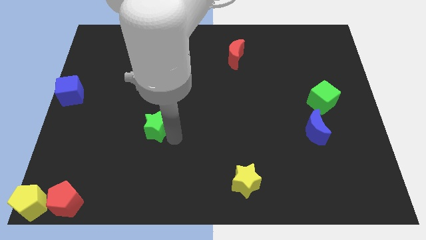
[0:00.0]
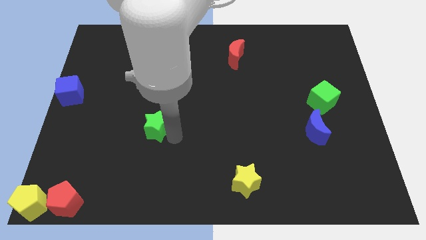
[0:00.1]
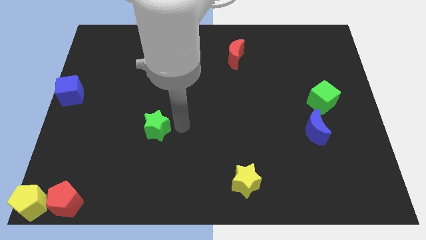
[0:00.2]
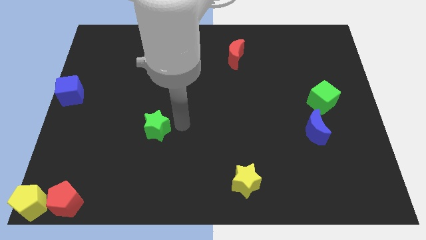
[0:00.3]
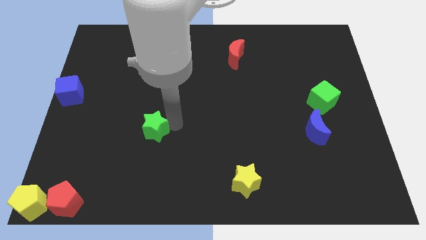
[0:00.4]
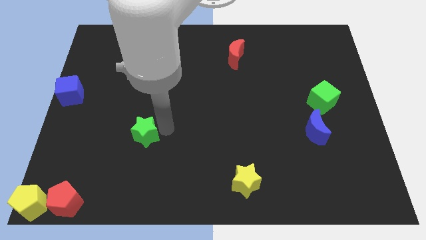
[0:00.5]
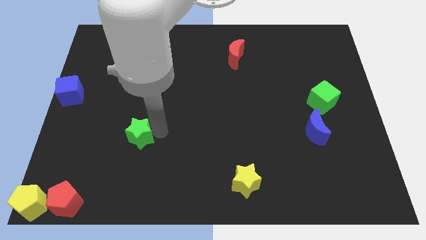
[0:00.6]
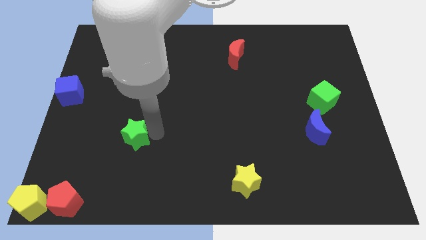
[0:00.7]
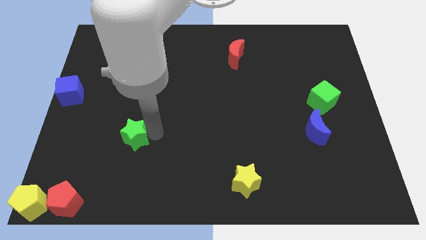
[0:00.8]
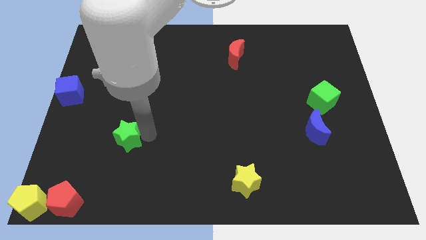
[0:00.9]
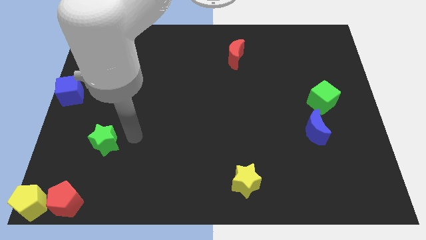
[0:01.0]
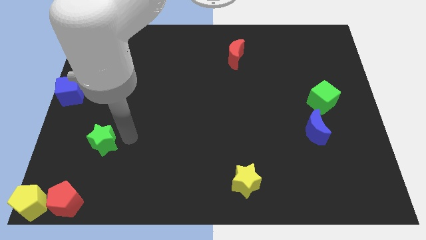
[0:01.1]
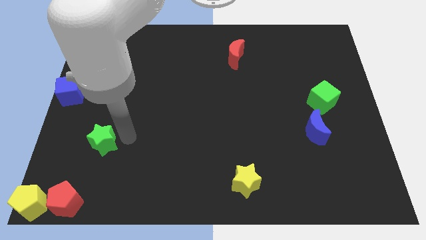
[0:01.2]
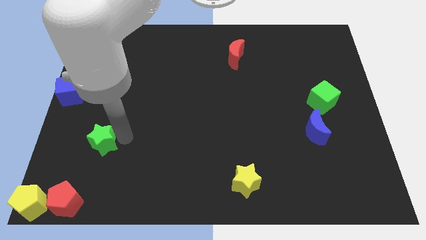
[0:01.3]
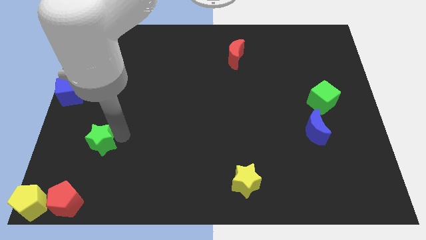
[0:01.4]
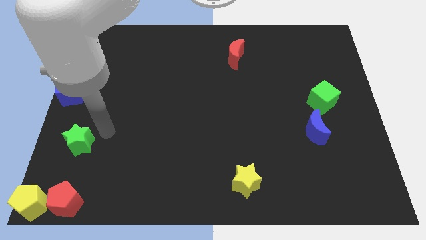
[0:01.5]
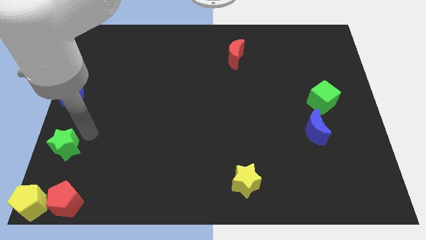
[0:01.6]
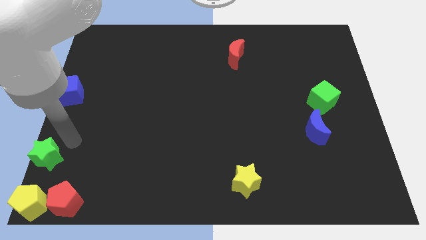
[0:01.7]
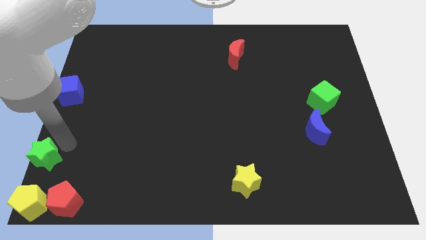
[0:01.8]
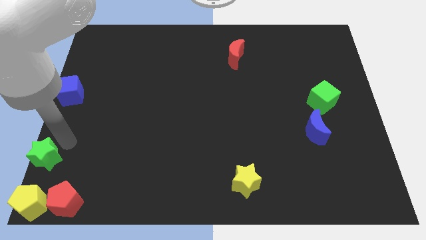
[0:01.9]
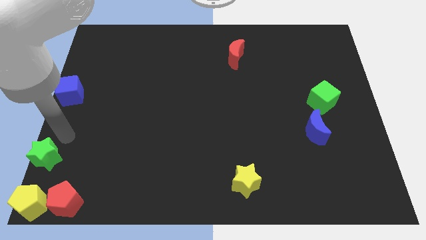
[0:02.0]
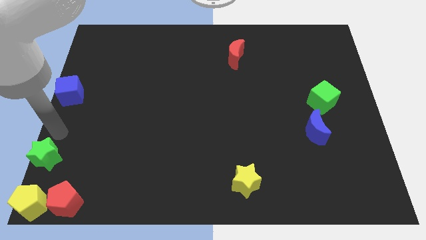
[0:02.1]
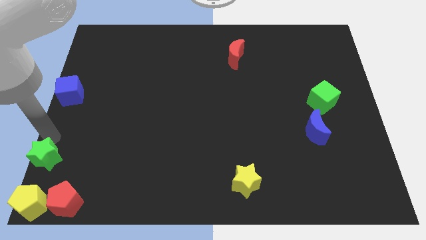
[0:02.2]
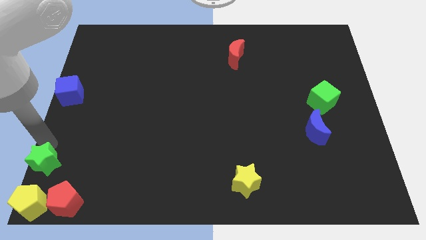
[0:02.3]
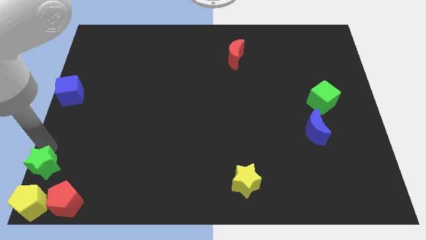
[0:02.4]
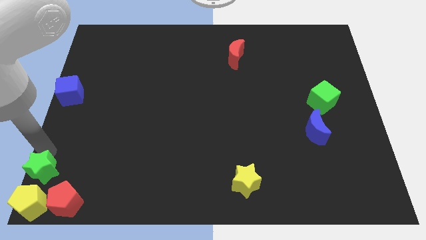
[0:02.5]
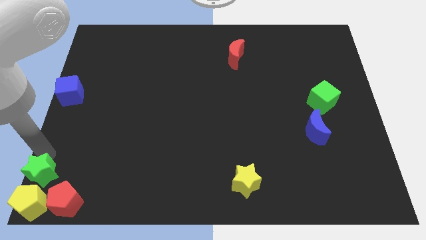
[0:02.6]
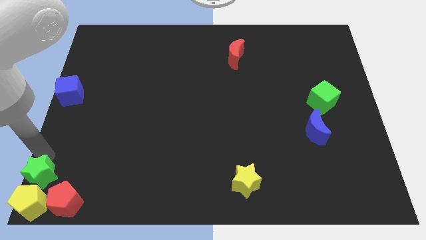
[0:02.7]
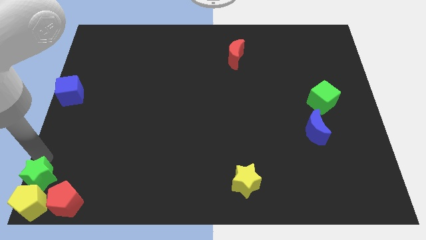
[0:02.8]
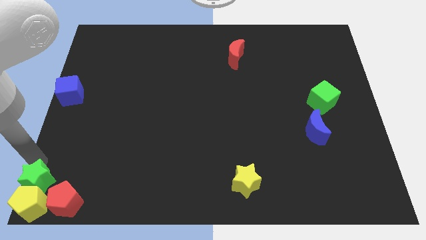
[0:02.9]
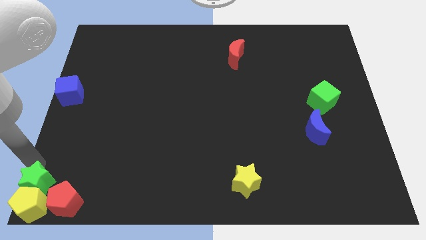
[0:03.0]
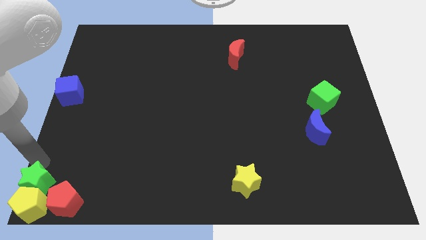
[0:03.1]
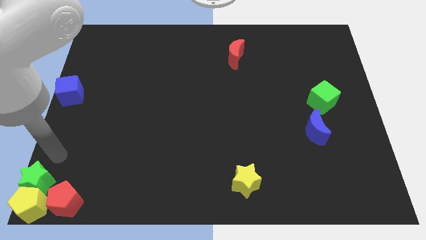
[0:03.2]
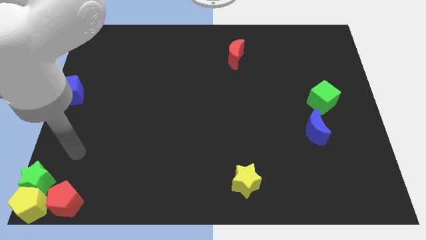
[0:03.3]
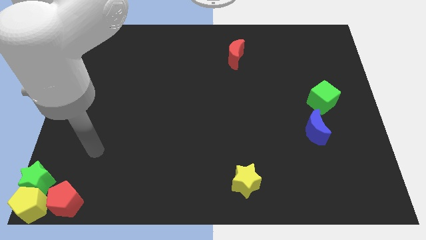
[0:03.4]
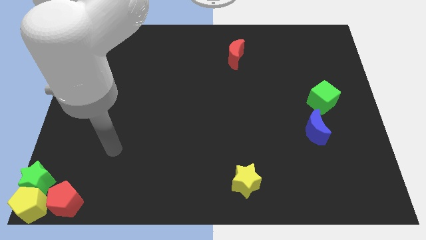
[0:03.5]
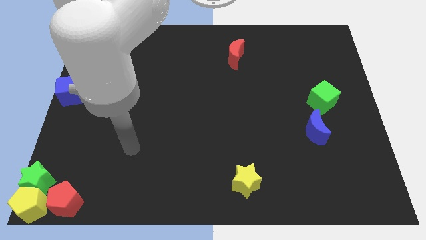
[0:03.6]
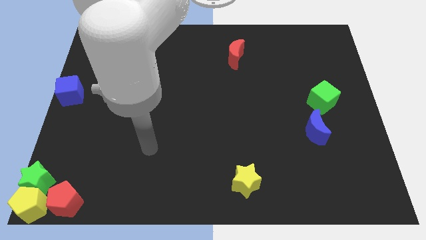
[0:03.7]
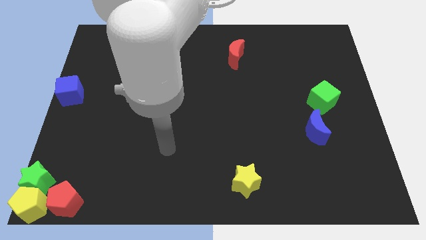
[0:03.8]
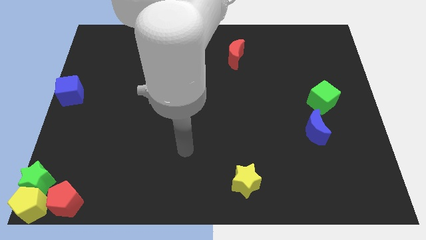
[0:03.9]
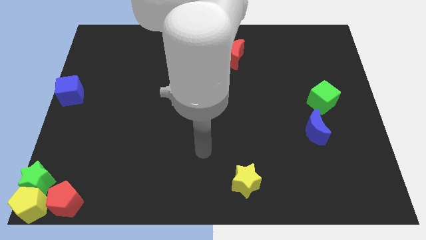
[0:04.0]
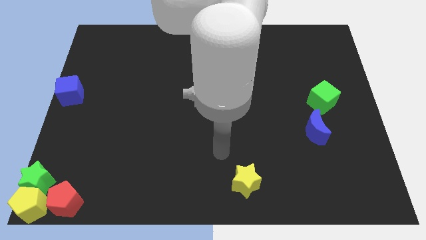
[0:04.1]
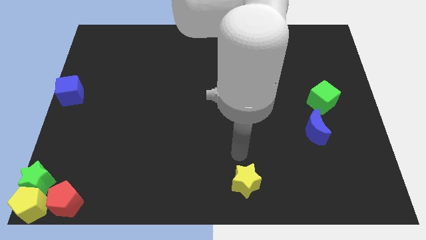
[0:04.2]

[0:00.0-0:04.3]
place the green star on top of the yellow pentagon

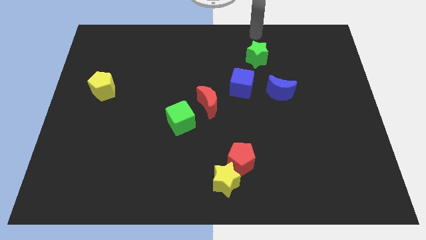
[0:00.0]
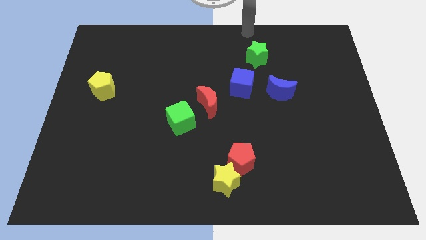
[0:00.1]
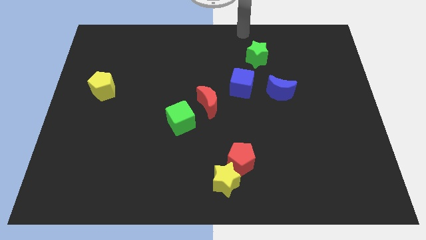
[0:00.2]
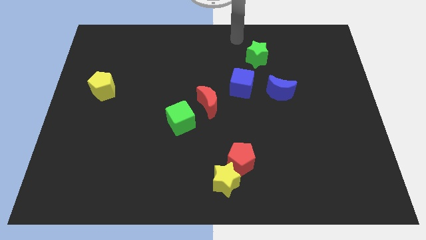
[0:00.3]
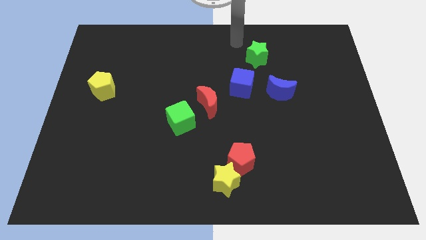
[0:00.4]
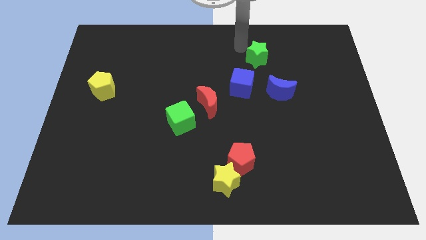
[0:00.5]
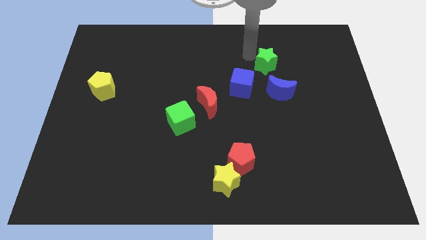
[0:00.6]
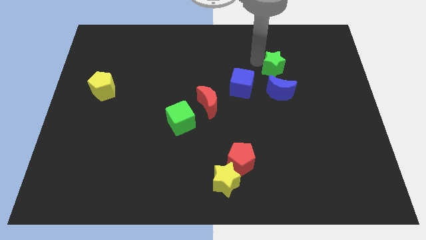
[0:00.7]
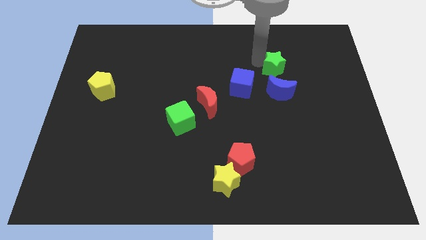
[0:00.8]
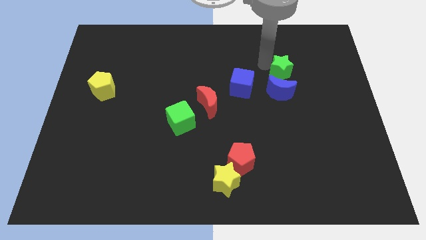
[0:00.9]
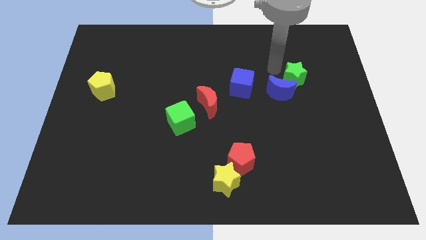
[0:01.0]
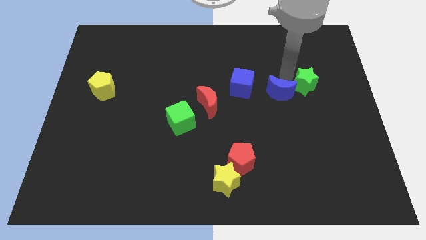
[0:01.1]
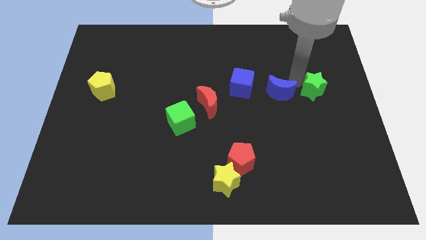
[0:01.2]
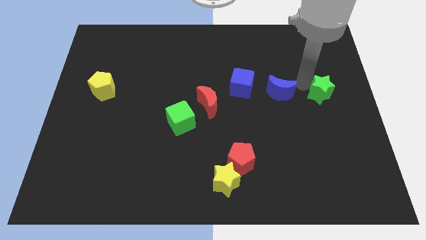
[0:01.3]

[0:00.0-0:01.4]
push the green star to the right side of the blue moon

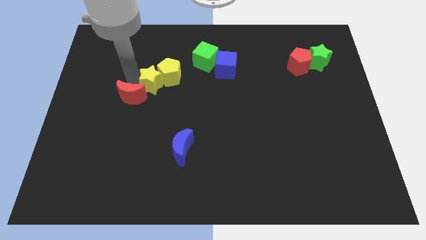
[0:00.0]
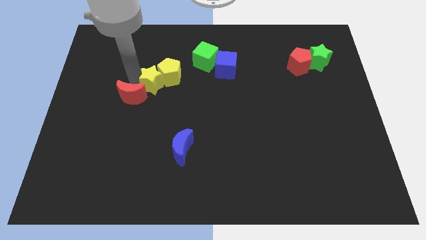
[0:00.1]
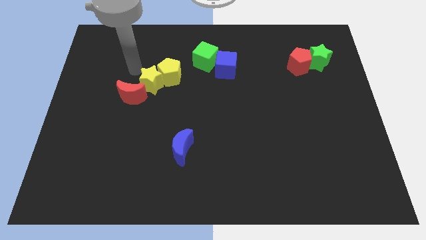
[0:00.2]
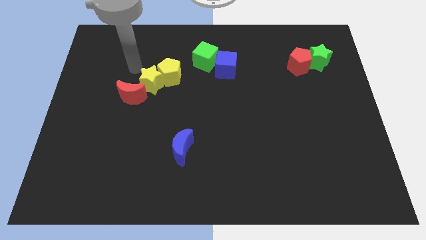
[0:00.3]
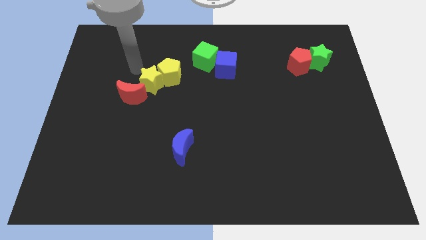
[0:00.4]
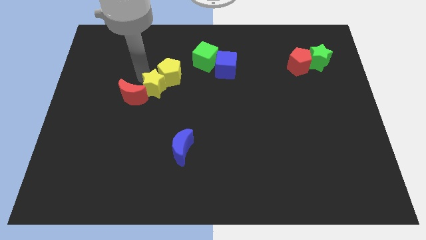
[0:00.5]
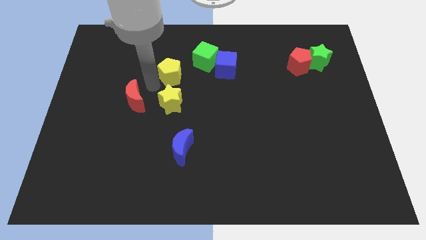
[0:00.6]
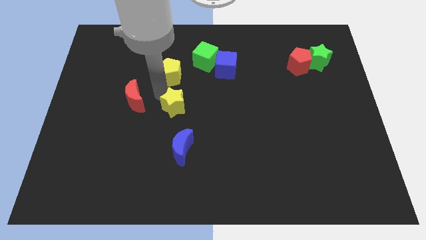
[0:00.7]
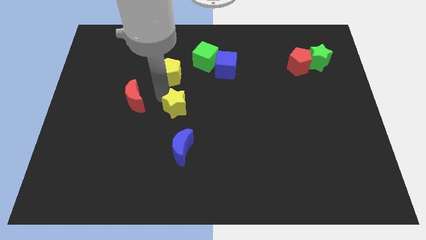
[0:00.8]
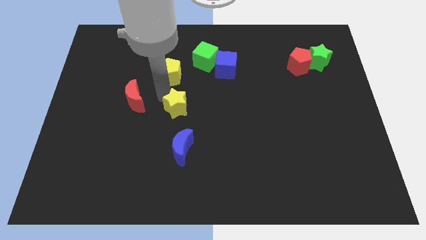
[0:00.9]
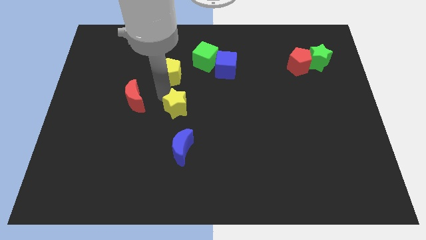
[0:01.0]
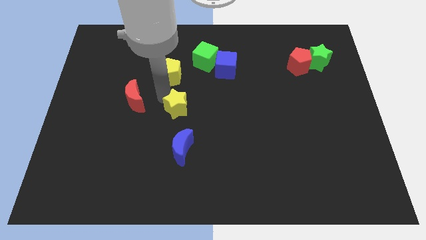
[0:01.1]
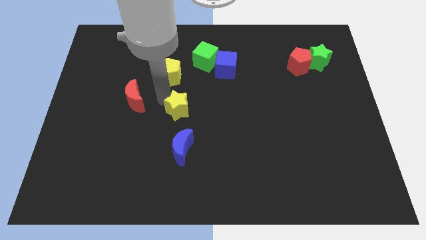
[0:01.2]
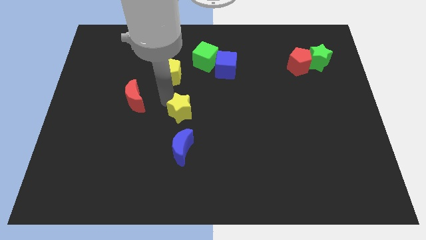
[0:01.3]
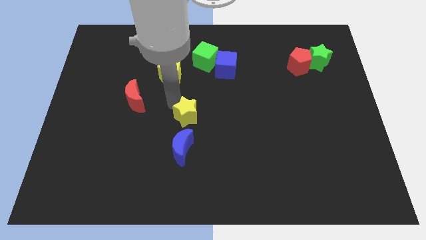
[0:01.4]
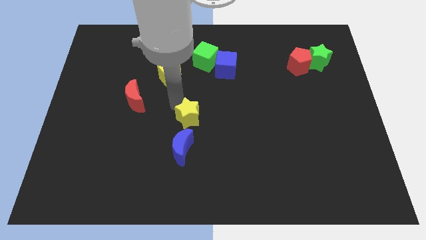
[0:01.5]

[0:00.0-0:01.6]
move yellow star above blue crescent

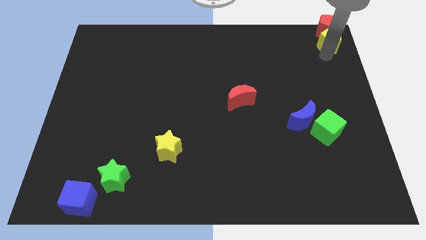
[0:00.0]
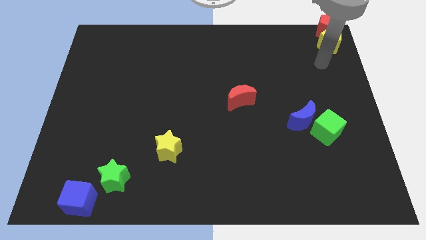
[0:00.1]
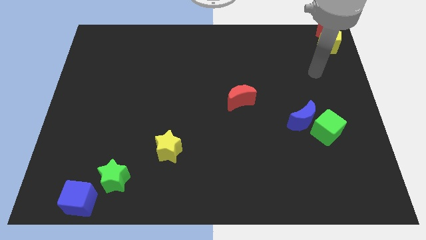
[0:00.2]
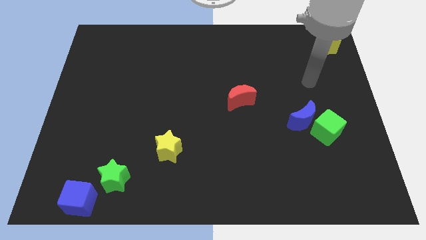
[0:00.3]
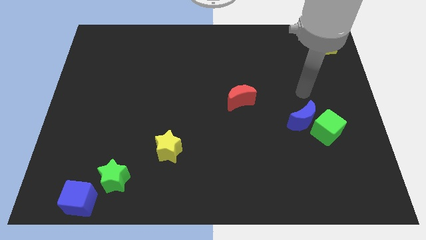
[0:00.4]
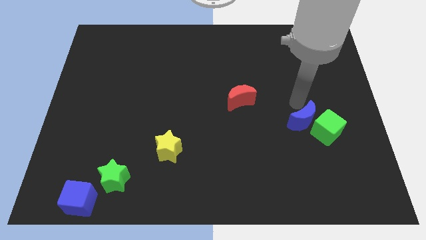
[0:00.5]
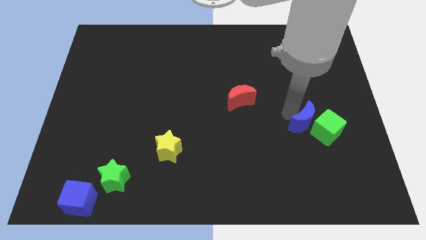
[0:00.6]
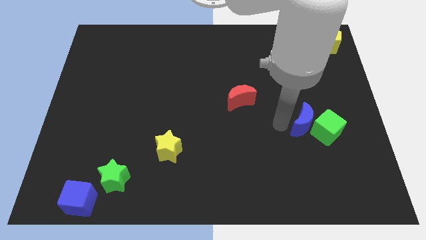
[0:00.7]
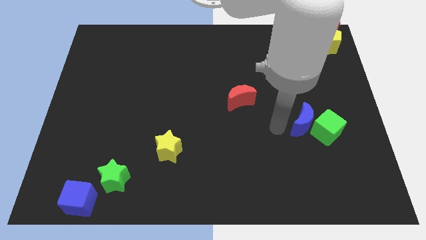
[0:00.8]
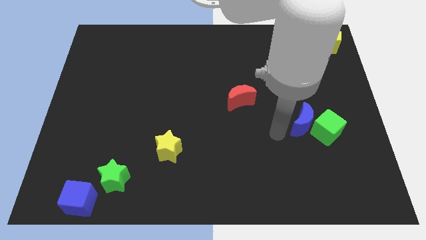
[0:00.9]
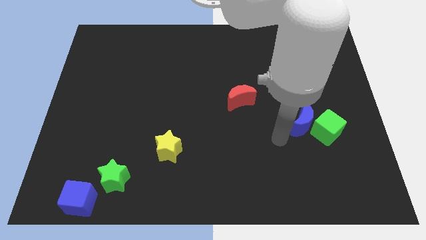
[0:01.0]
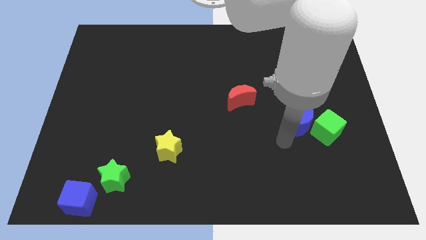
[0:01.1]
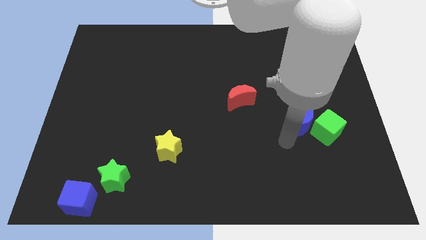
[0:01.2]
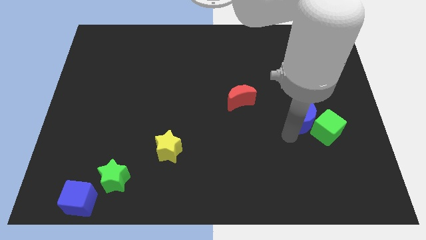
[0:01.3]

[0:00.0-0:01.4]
slightly push the blue moon towards the green cube

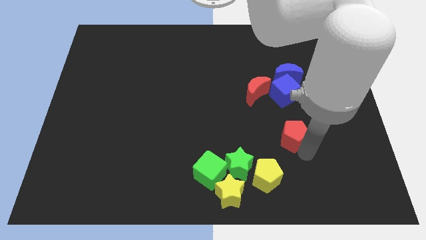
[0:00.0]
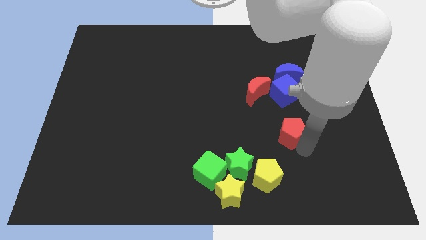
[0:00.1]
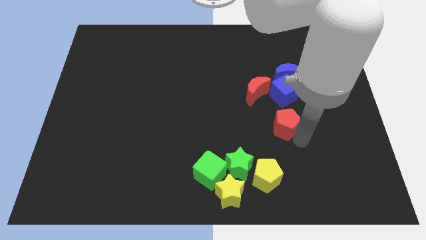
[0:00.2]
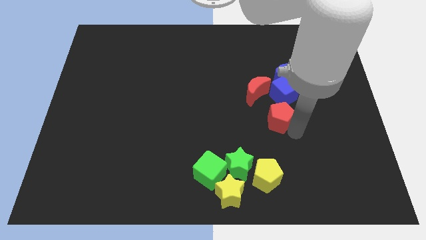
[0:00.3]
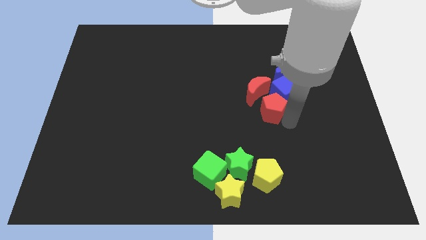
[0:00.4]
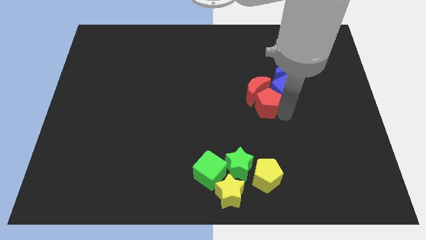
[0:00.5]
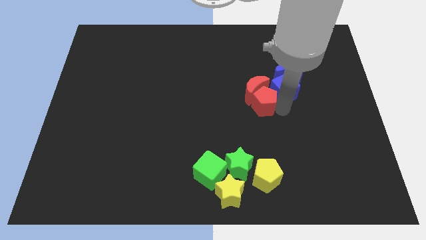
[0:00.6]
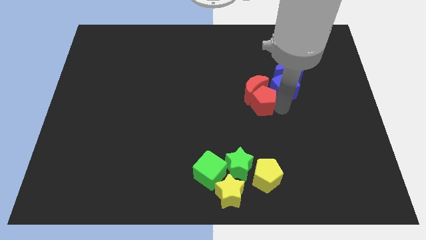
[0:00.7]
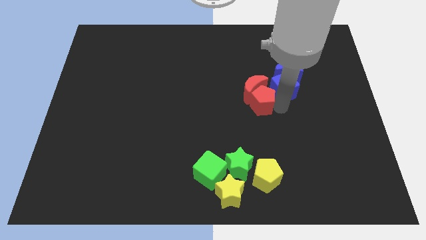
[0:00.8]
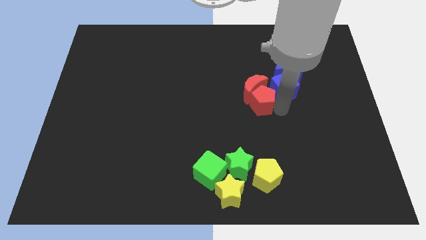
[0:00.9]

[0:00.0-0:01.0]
move the red pentagon into the red moon
